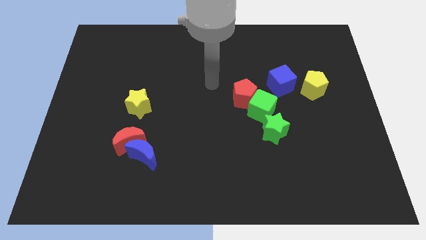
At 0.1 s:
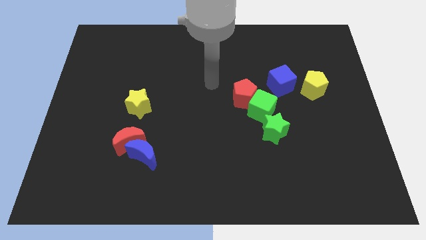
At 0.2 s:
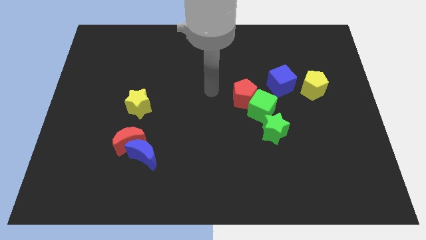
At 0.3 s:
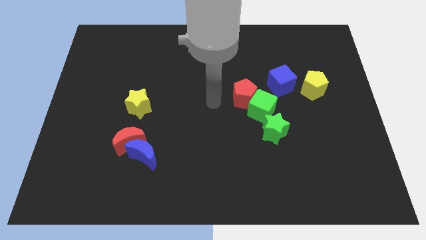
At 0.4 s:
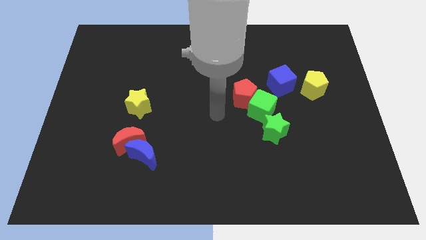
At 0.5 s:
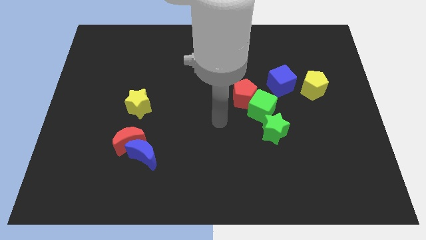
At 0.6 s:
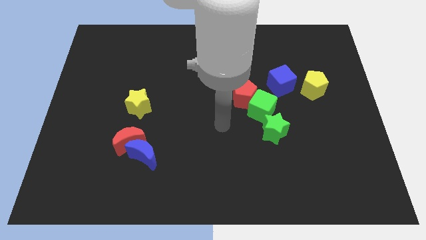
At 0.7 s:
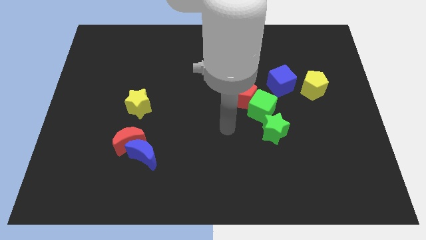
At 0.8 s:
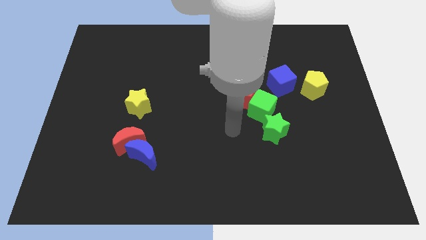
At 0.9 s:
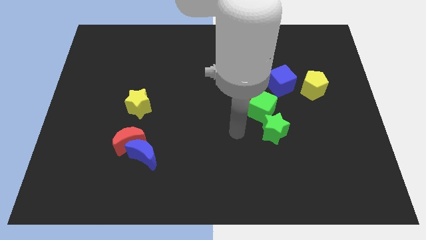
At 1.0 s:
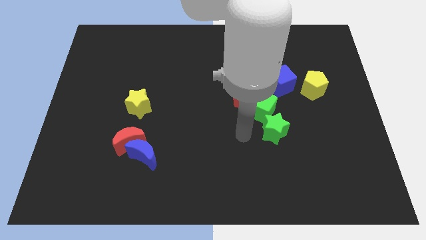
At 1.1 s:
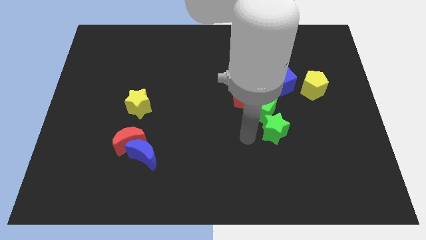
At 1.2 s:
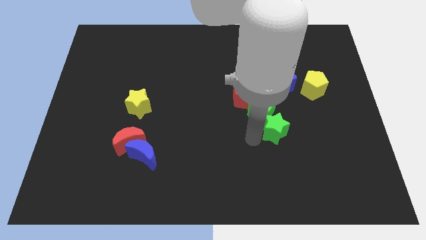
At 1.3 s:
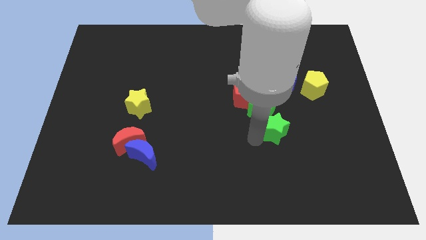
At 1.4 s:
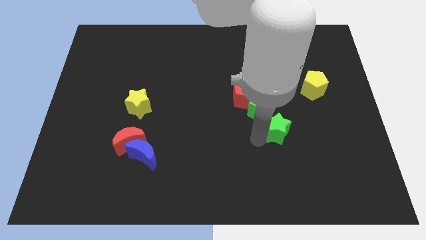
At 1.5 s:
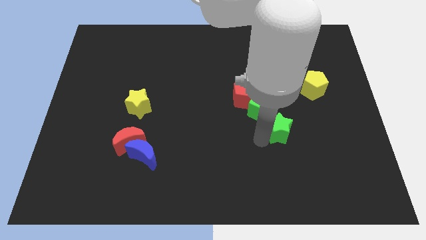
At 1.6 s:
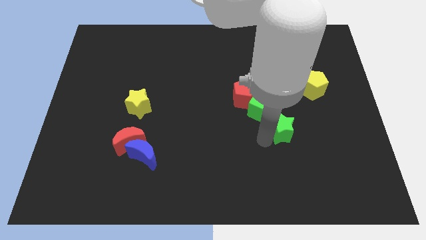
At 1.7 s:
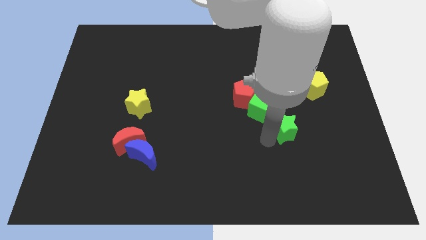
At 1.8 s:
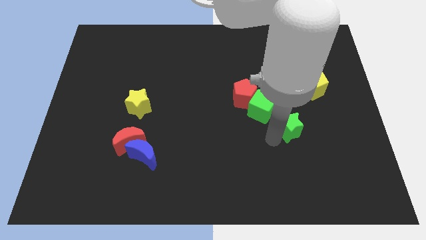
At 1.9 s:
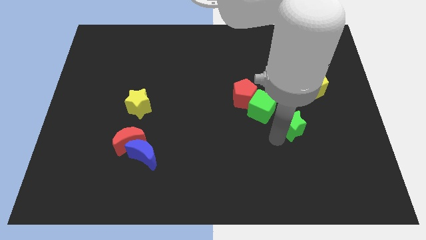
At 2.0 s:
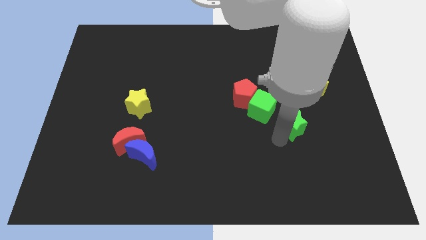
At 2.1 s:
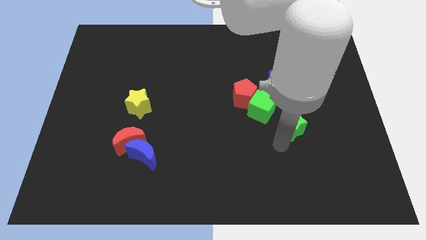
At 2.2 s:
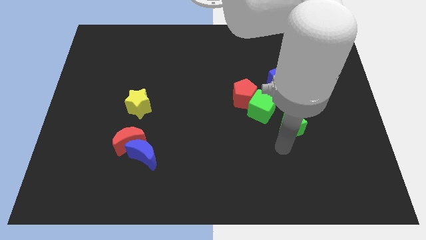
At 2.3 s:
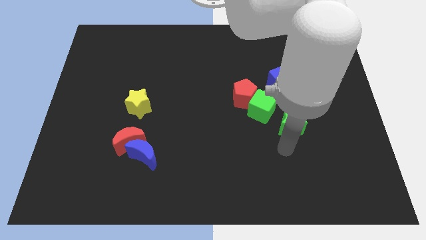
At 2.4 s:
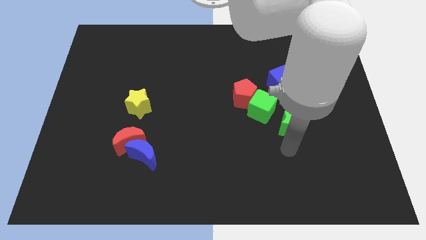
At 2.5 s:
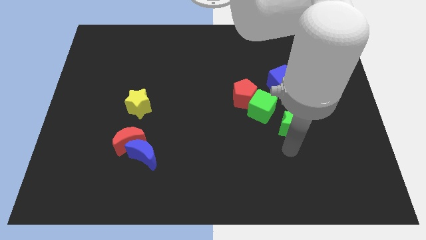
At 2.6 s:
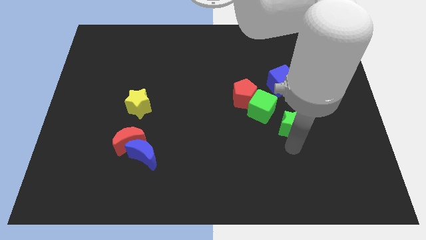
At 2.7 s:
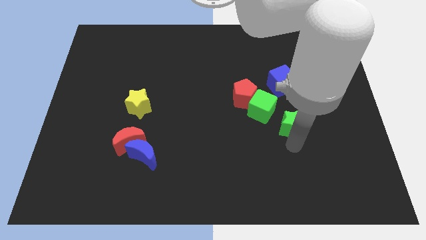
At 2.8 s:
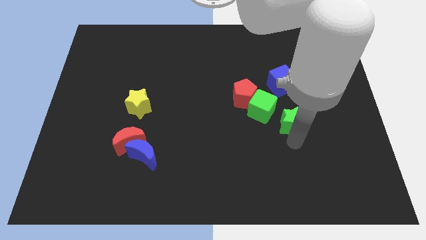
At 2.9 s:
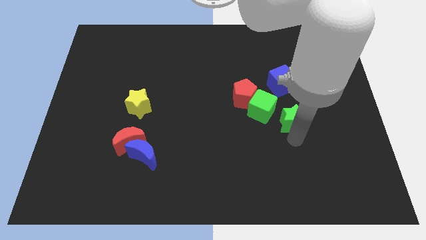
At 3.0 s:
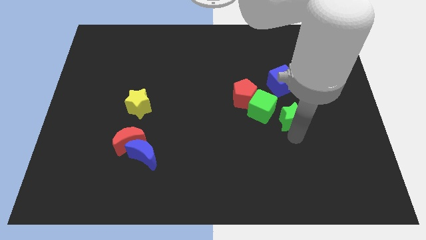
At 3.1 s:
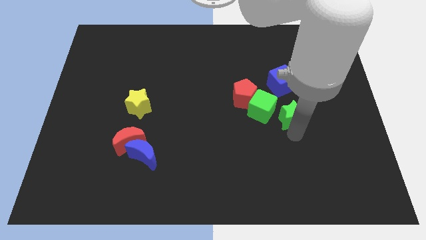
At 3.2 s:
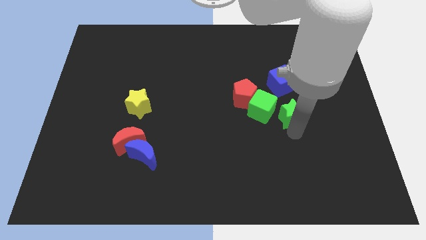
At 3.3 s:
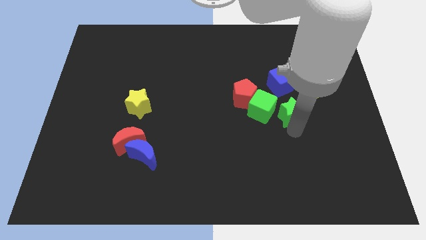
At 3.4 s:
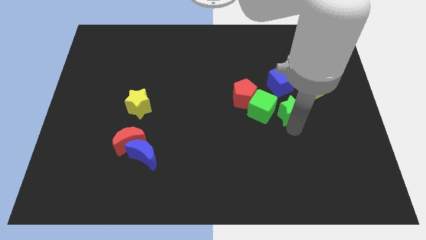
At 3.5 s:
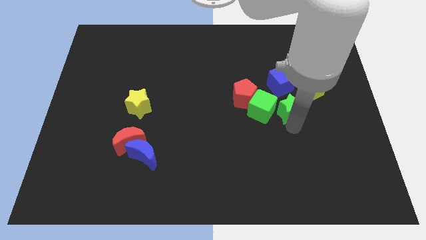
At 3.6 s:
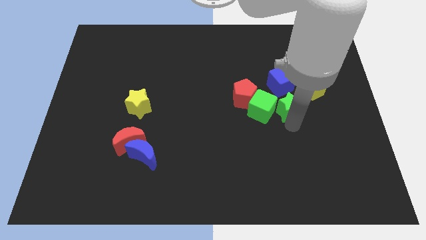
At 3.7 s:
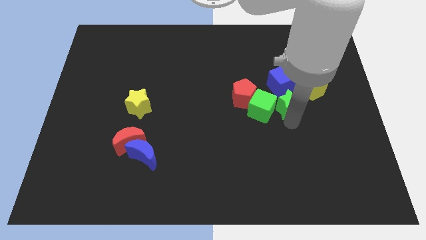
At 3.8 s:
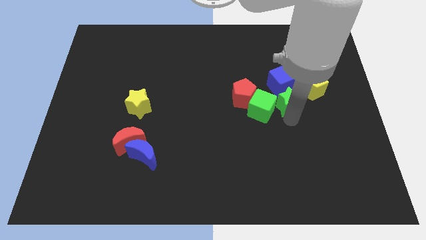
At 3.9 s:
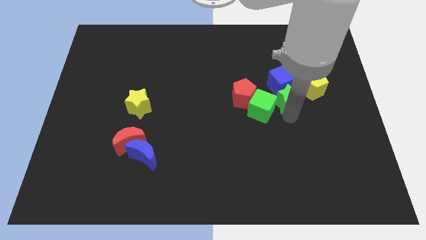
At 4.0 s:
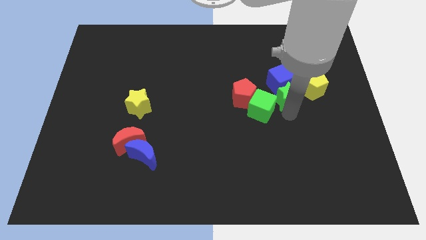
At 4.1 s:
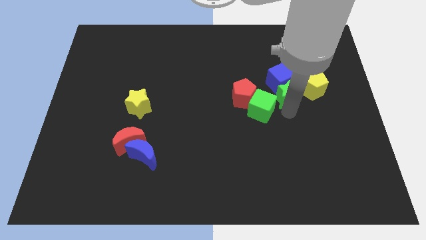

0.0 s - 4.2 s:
move the green star next to the blue cube

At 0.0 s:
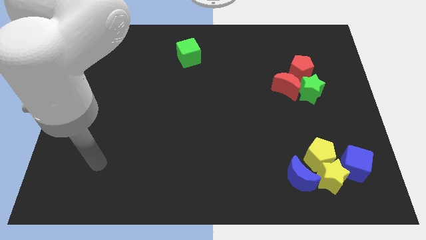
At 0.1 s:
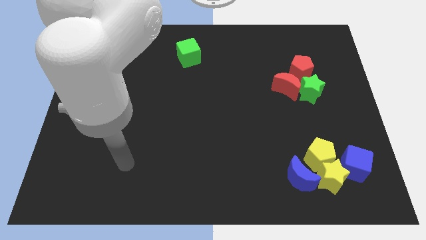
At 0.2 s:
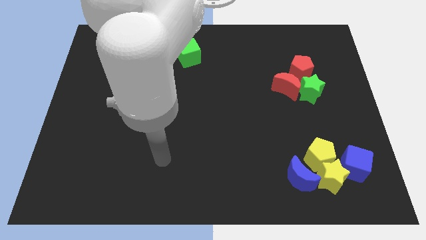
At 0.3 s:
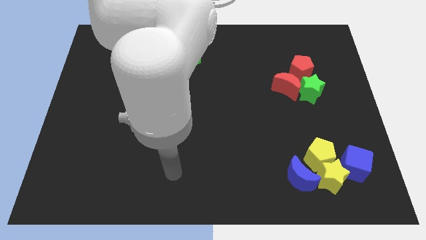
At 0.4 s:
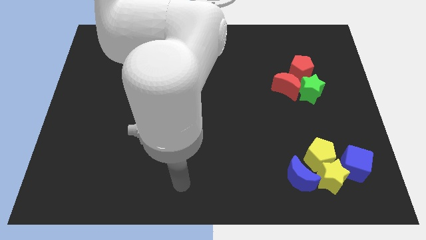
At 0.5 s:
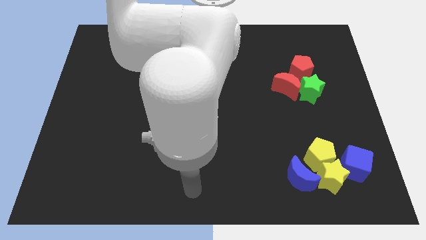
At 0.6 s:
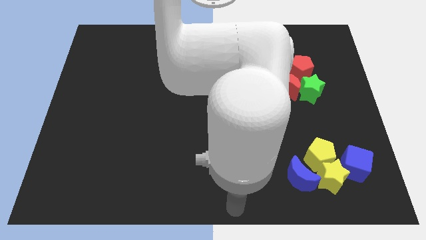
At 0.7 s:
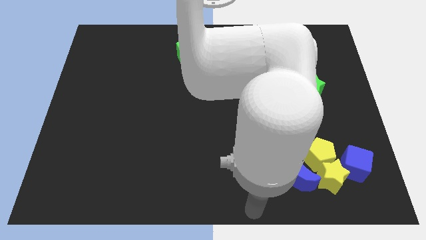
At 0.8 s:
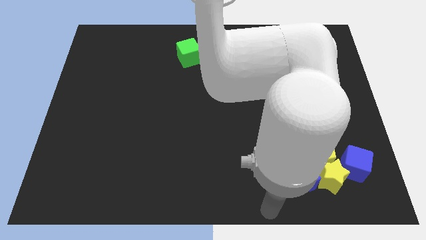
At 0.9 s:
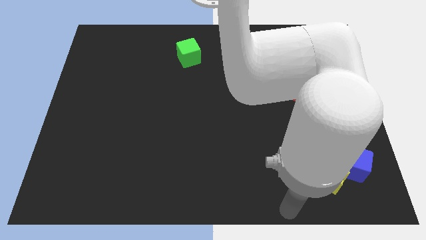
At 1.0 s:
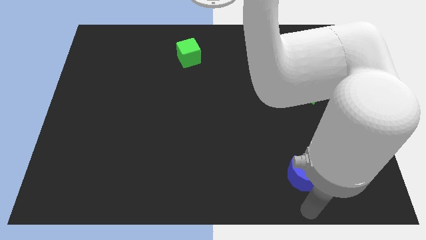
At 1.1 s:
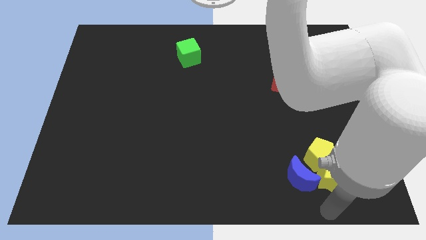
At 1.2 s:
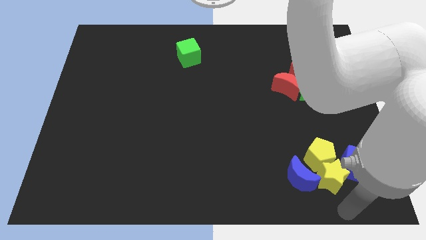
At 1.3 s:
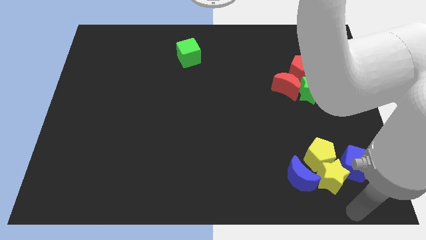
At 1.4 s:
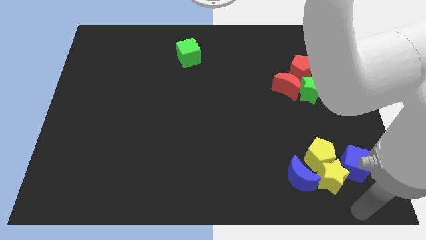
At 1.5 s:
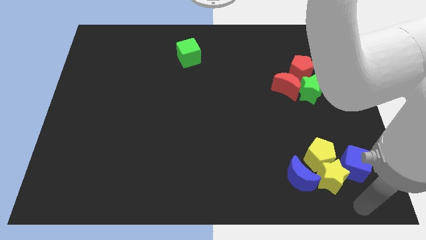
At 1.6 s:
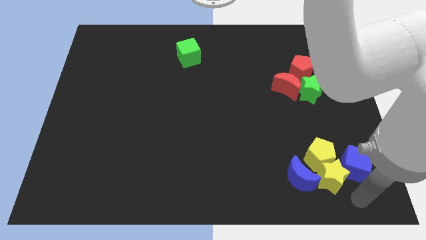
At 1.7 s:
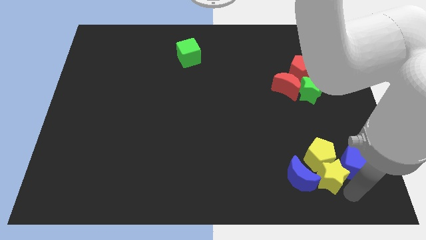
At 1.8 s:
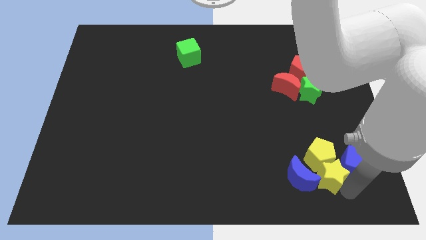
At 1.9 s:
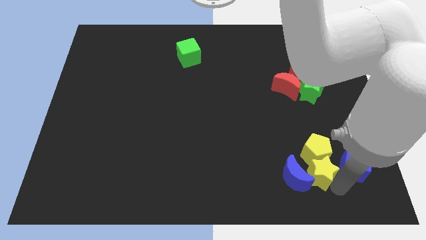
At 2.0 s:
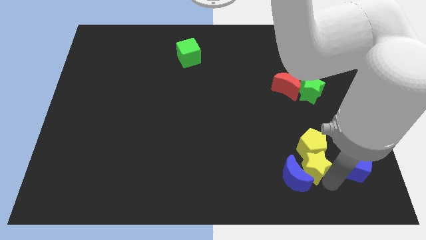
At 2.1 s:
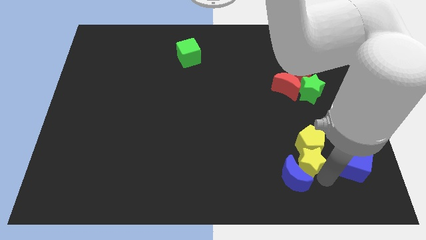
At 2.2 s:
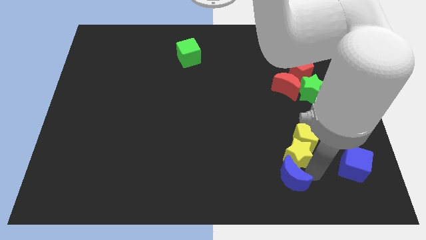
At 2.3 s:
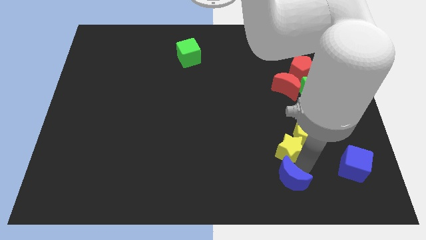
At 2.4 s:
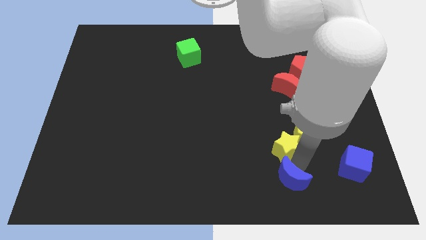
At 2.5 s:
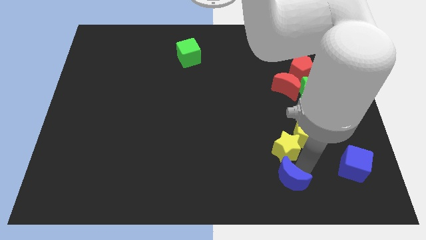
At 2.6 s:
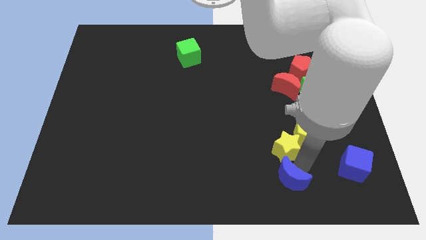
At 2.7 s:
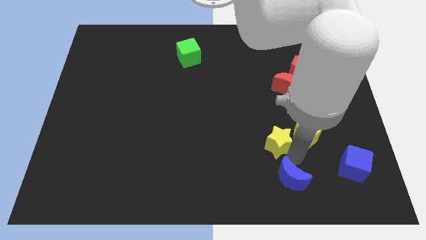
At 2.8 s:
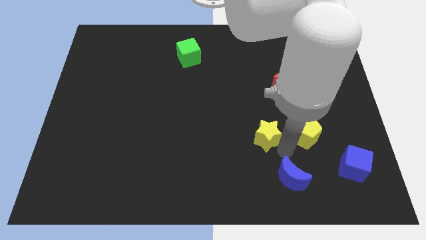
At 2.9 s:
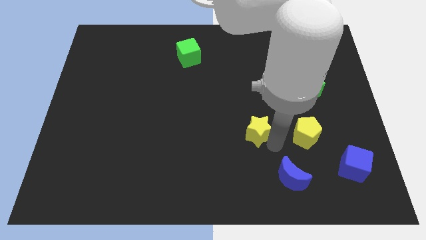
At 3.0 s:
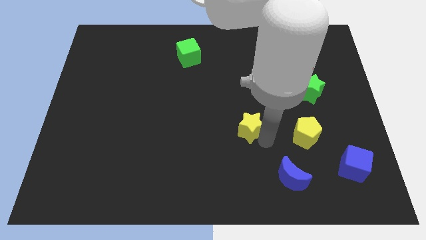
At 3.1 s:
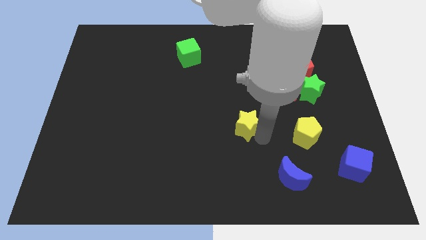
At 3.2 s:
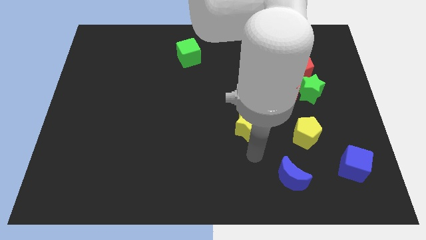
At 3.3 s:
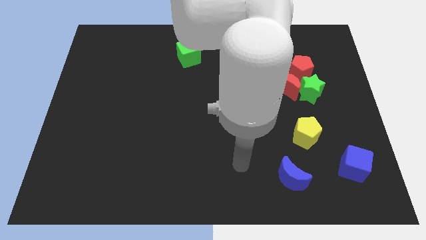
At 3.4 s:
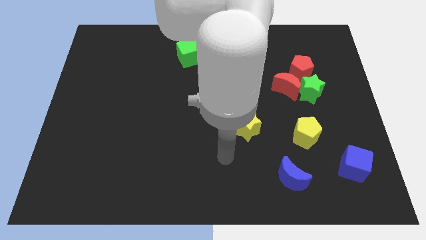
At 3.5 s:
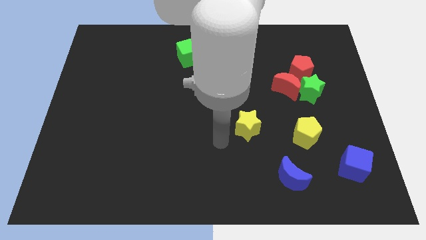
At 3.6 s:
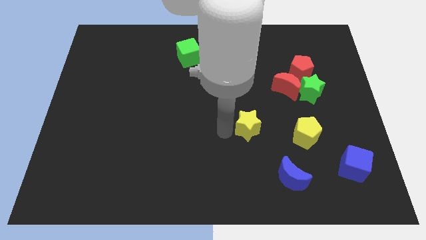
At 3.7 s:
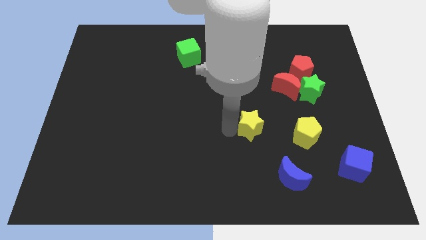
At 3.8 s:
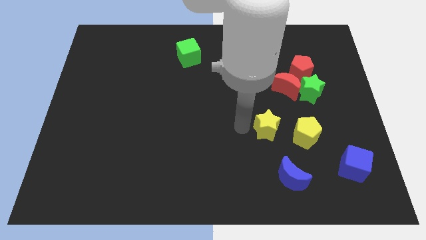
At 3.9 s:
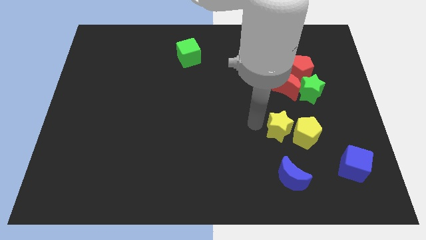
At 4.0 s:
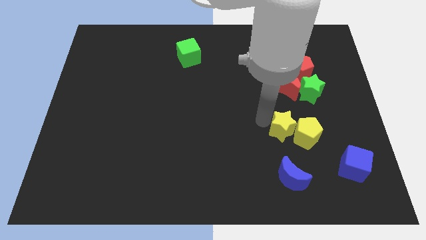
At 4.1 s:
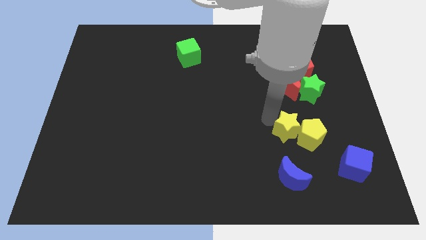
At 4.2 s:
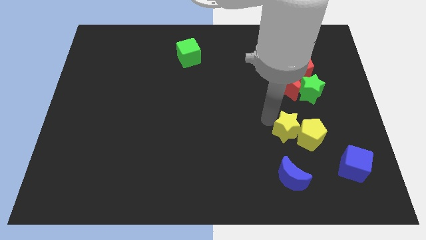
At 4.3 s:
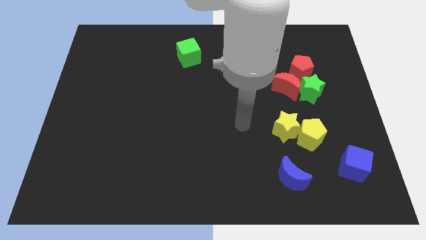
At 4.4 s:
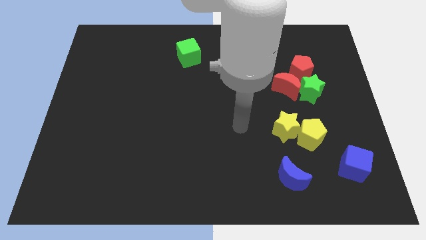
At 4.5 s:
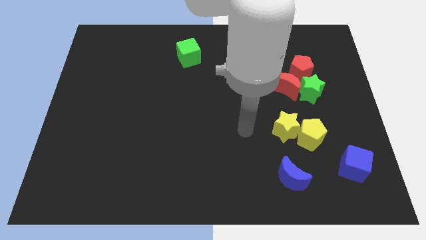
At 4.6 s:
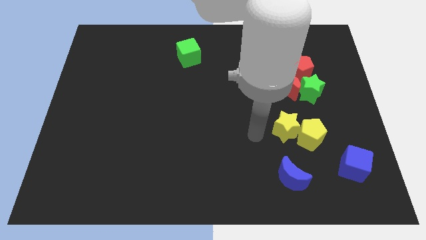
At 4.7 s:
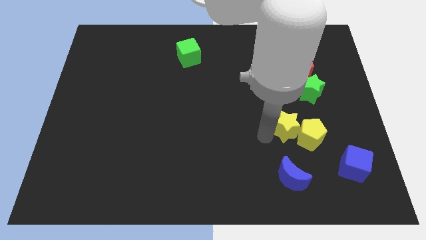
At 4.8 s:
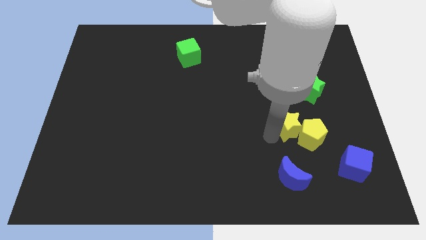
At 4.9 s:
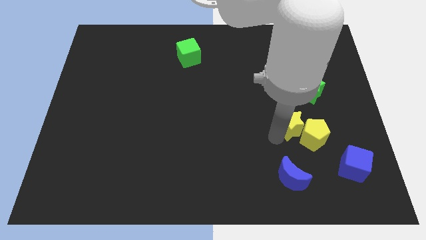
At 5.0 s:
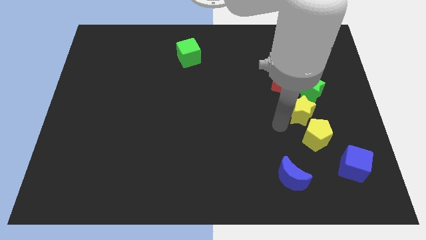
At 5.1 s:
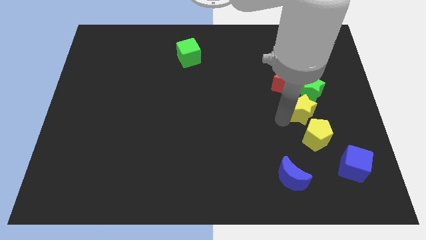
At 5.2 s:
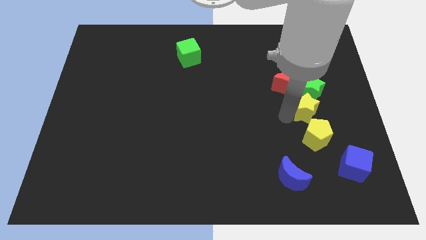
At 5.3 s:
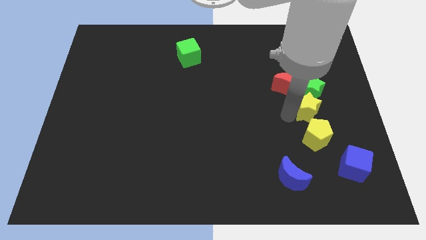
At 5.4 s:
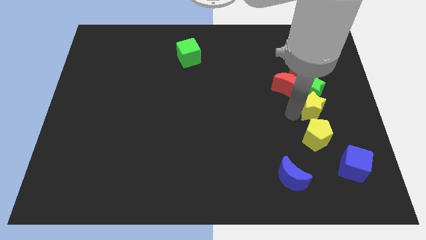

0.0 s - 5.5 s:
move the yellow star close to the green star
